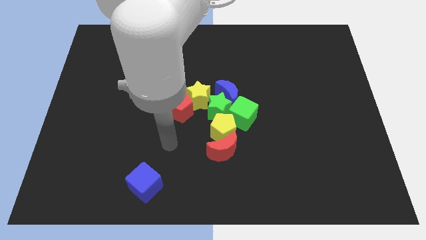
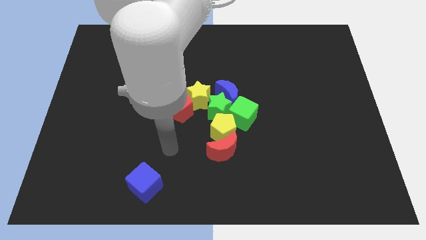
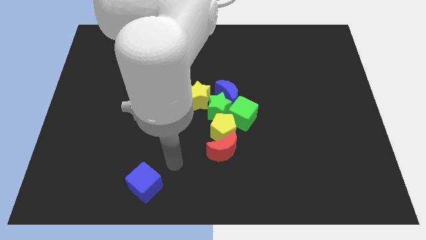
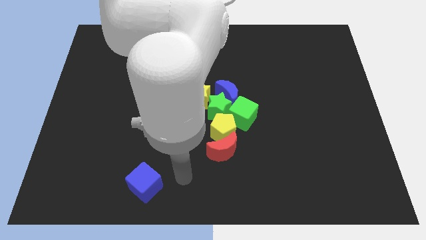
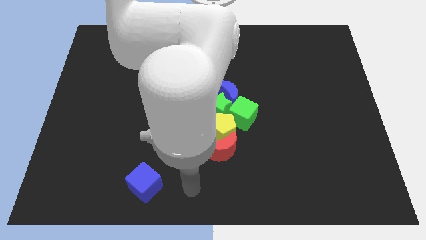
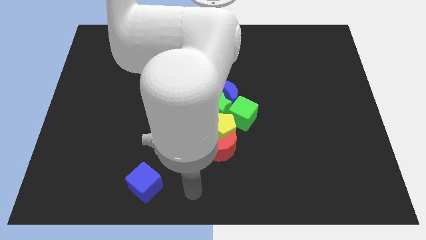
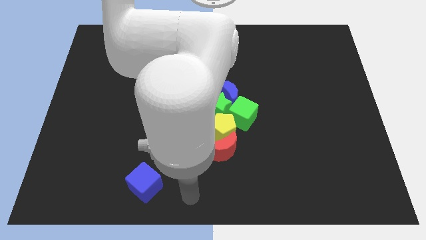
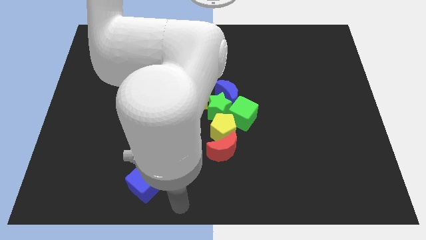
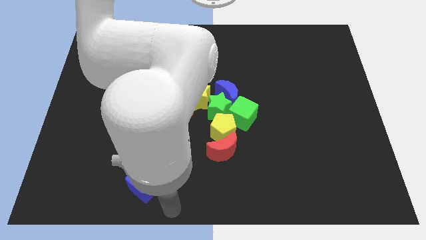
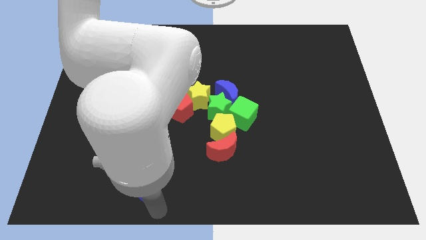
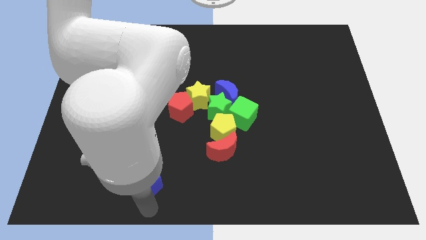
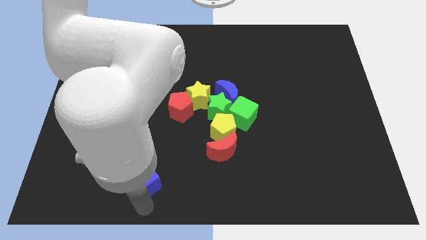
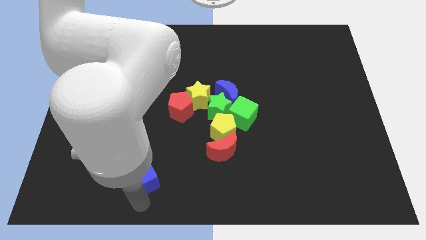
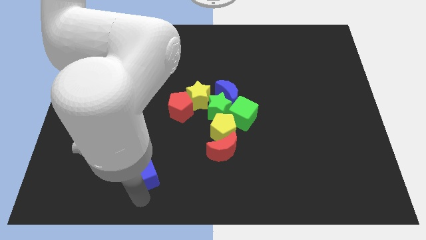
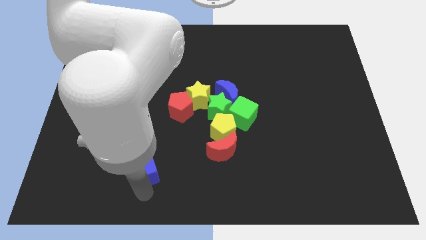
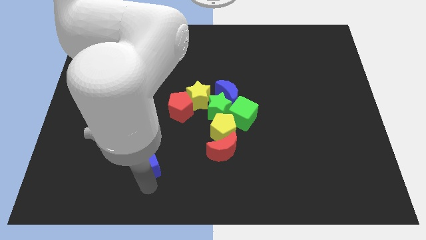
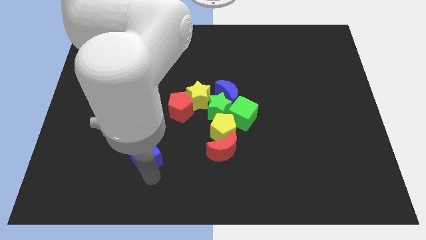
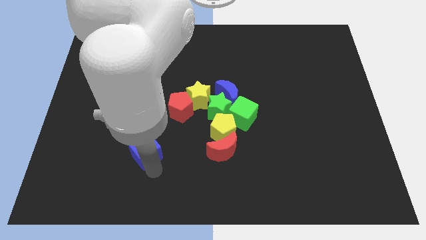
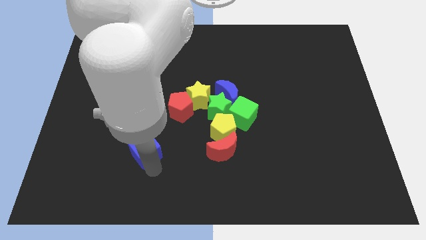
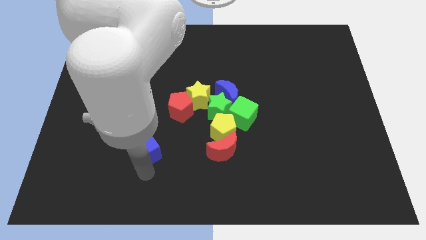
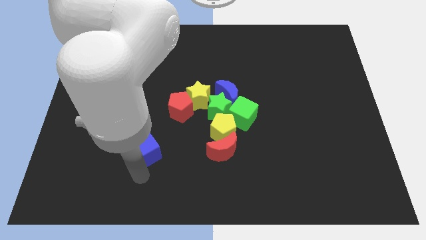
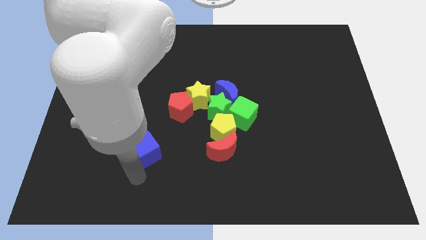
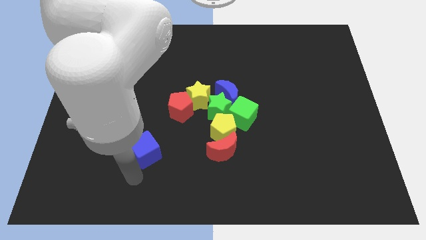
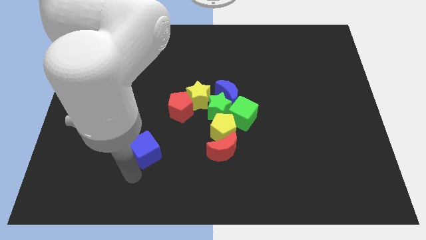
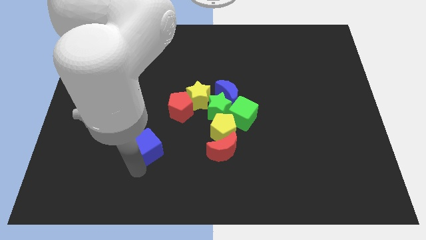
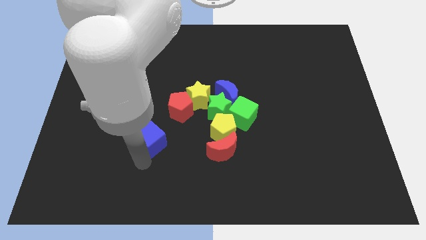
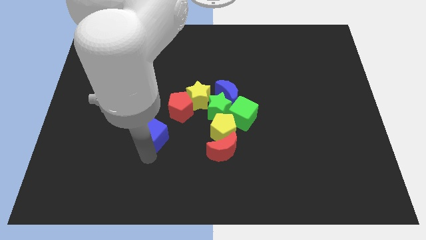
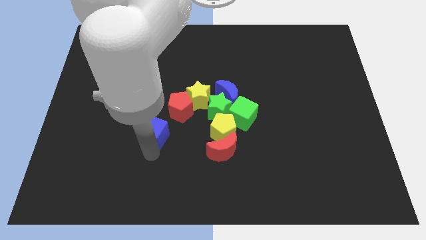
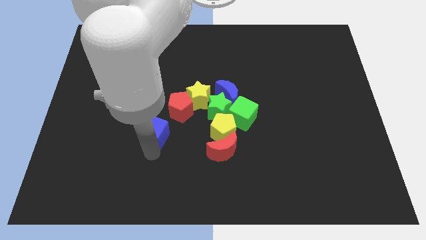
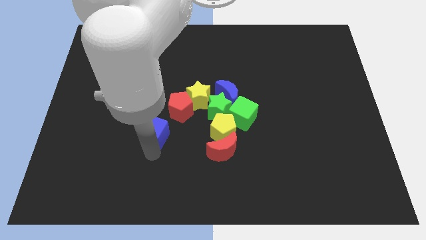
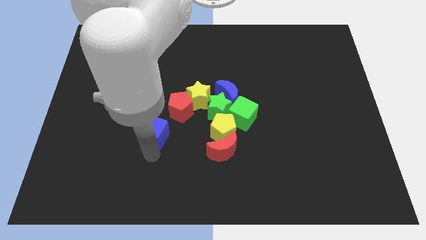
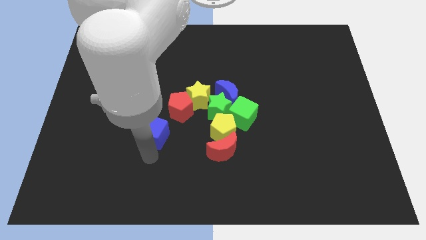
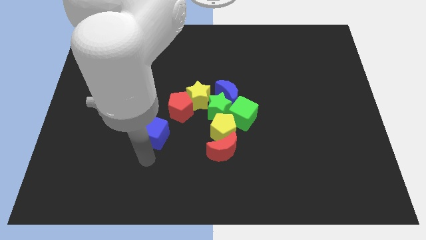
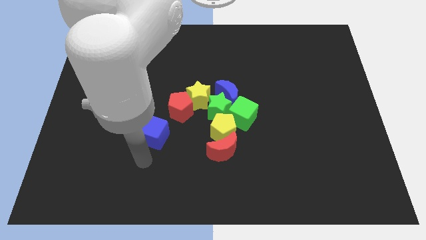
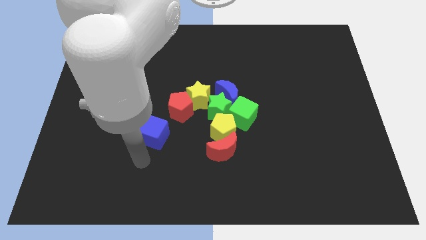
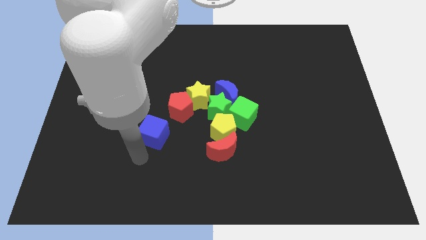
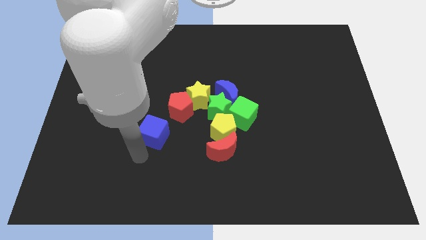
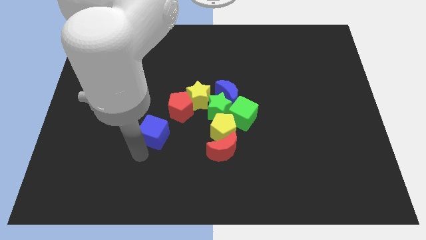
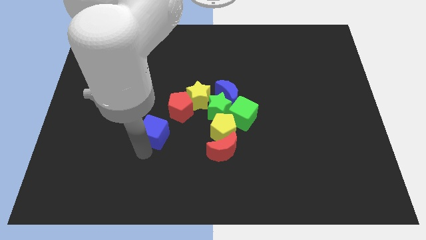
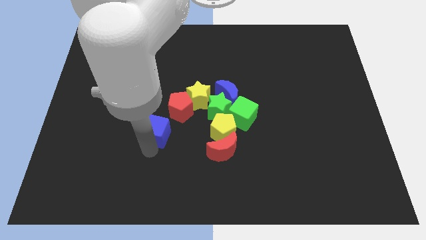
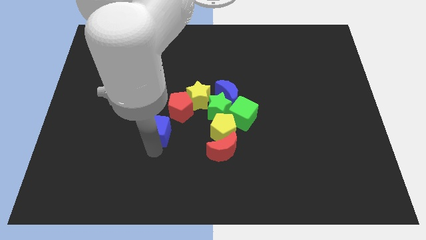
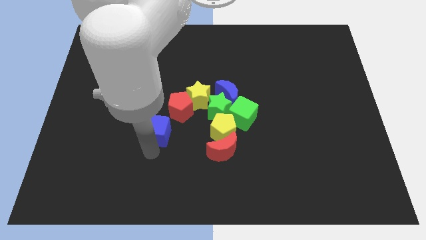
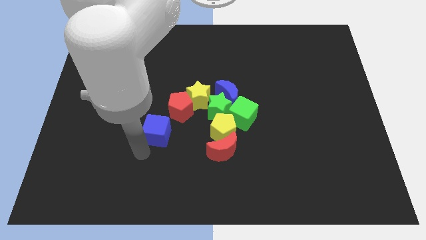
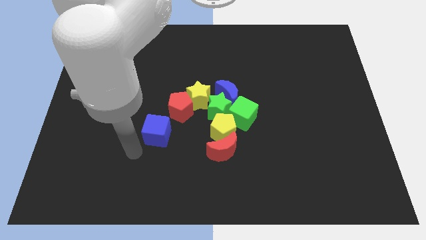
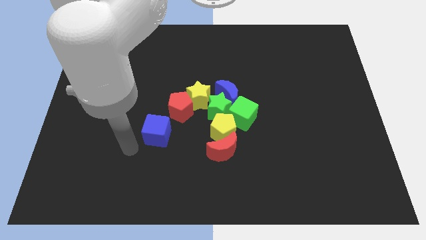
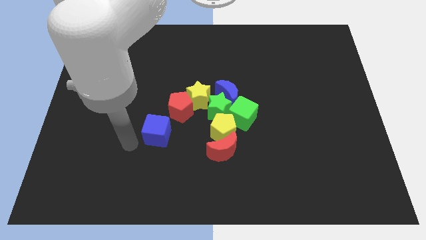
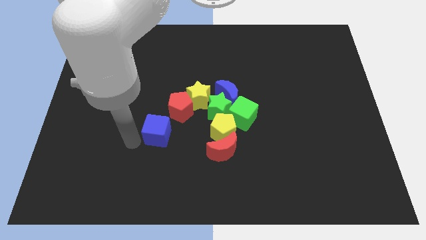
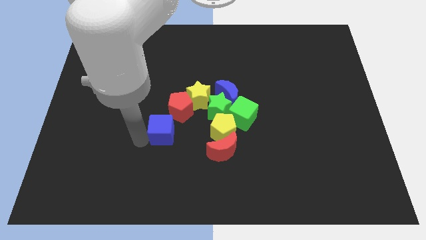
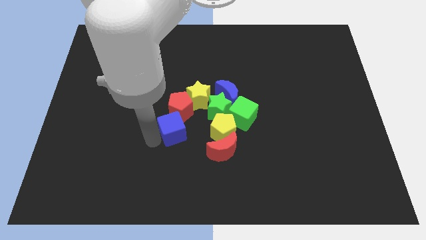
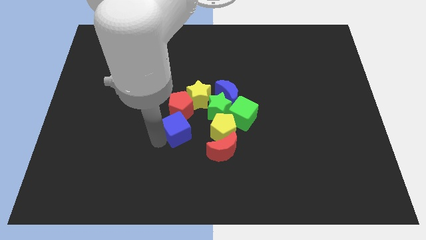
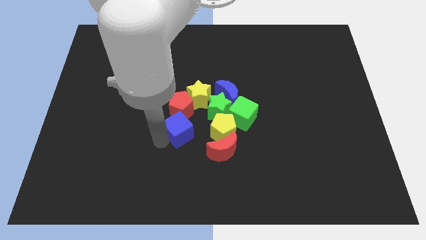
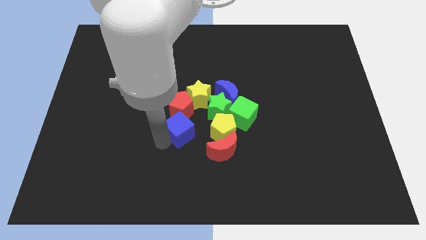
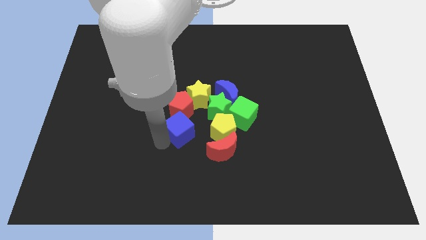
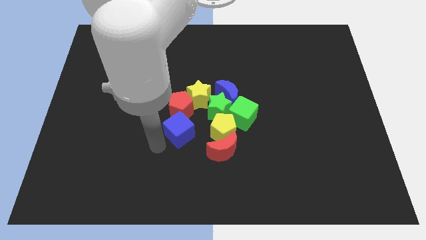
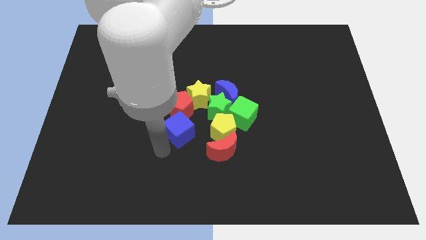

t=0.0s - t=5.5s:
put the blue cube to the bottom side of the red pentagon

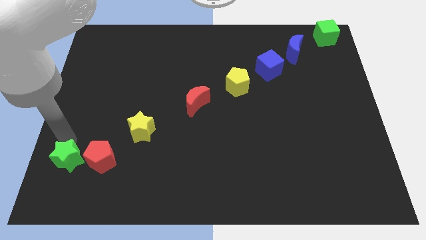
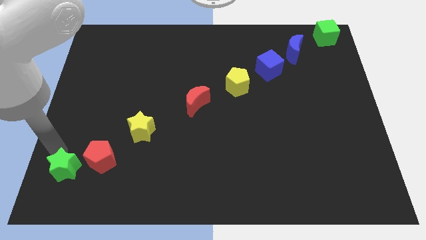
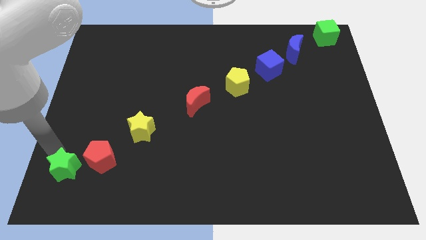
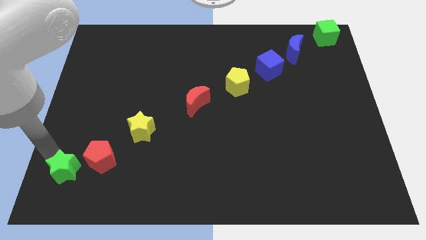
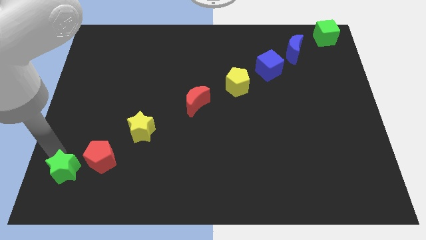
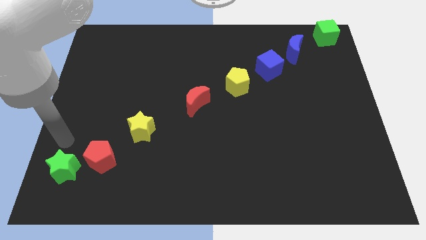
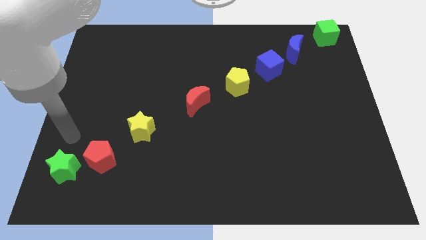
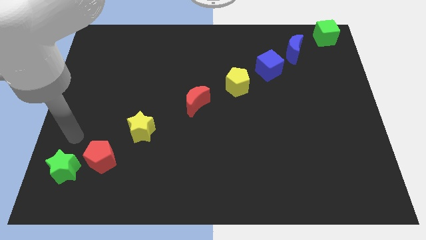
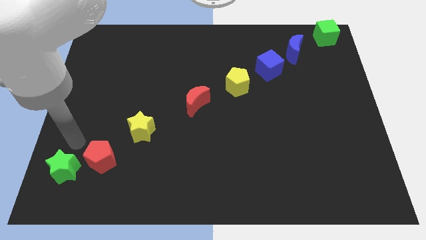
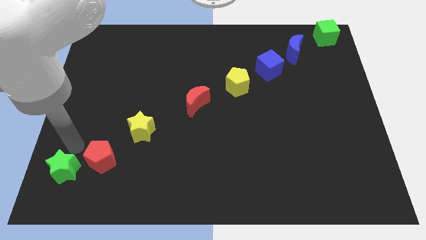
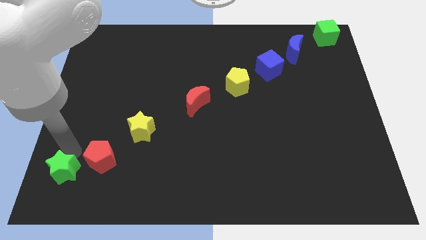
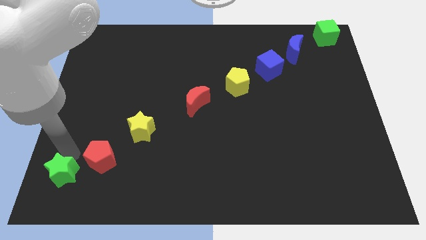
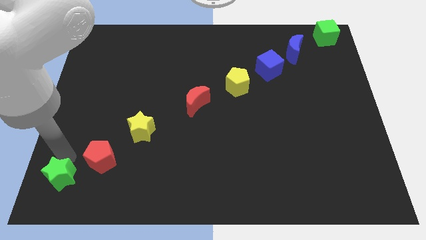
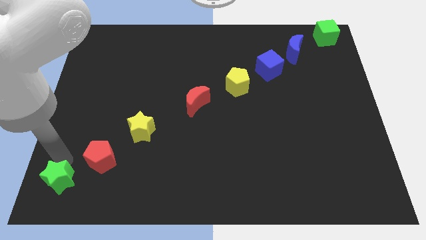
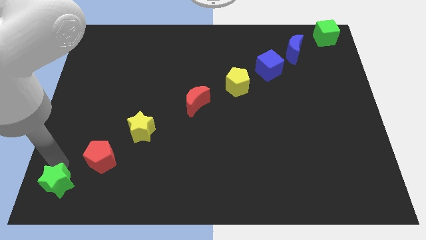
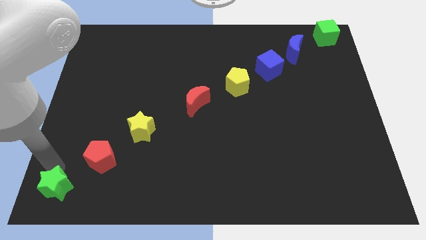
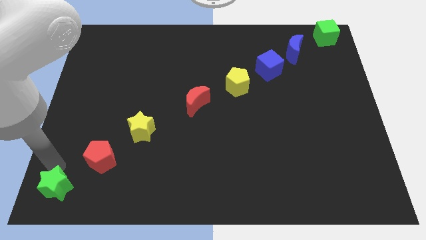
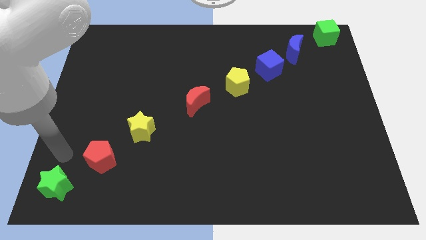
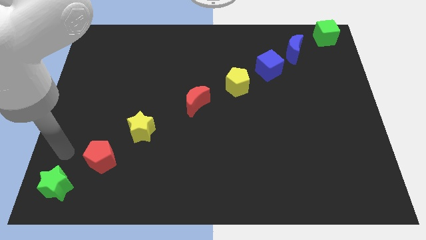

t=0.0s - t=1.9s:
push the green star to the bottom side

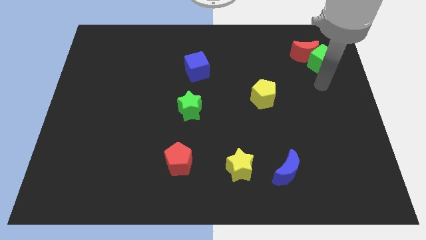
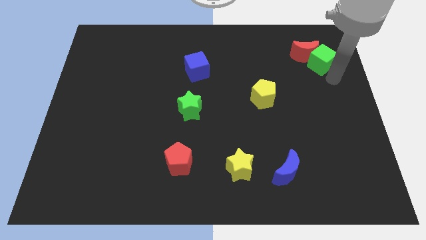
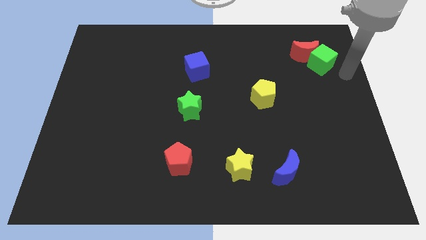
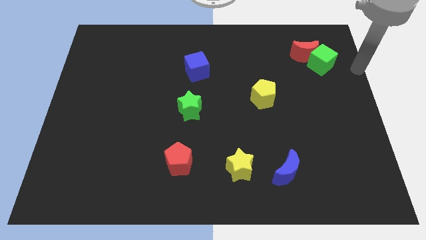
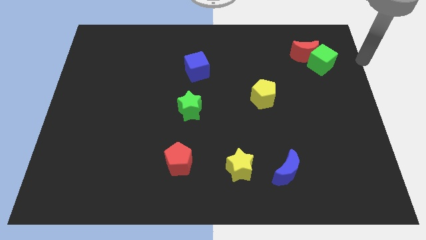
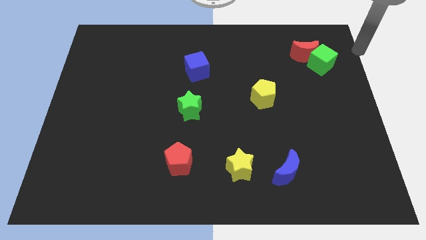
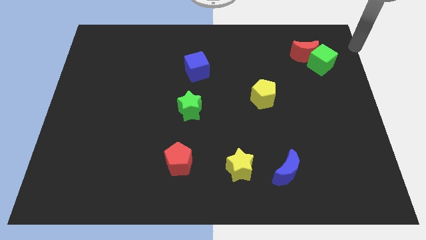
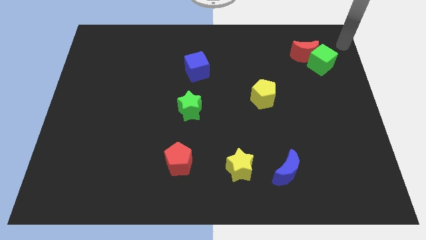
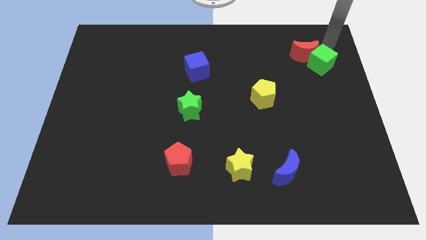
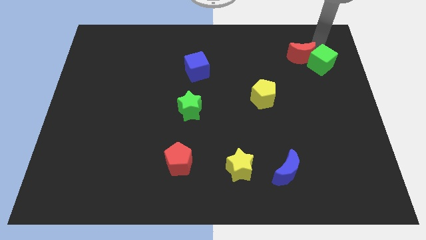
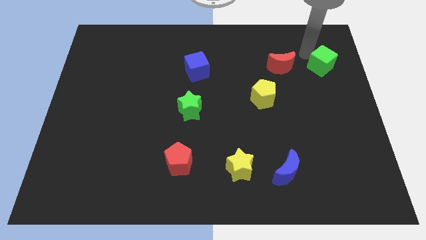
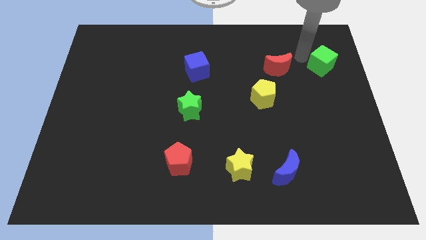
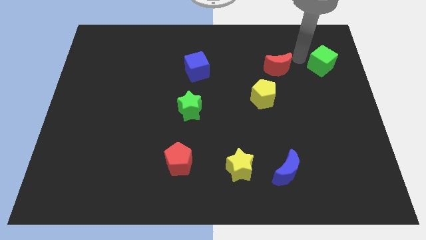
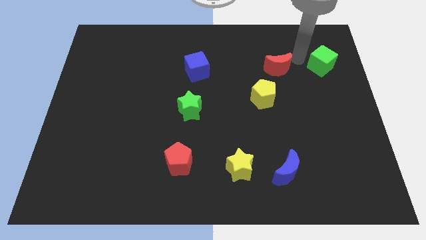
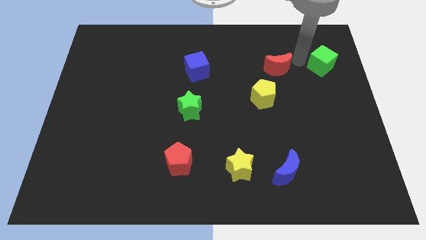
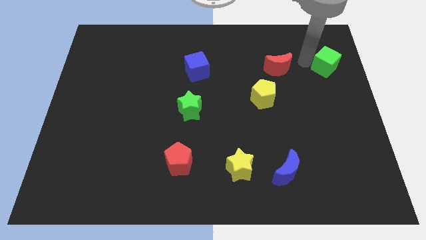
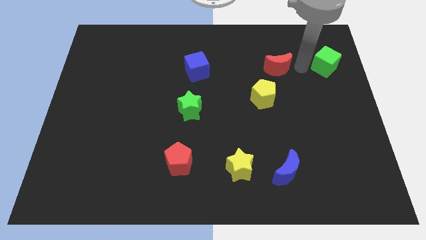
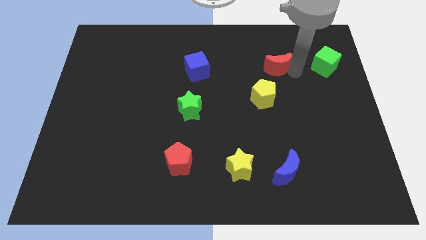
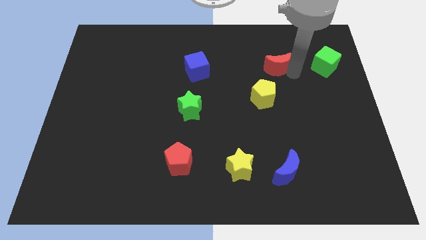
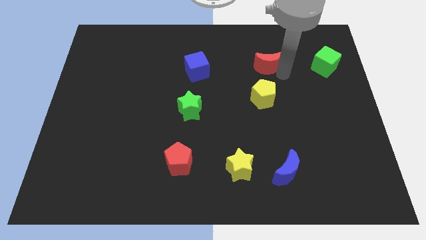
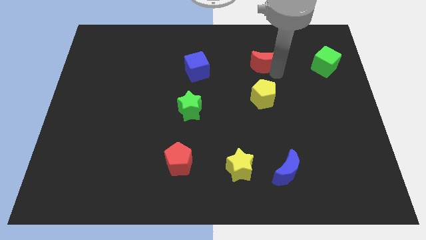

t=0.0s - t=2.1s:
separate the red moon from the green cube
